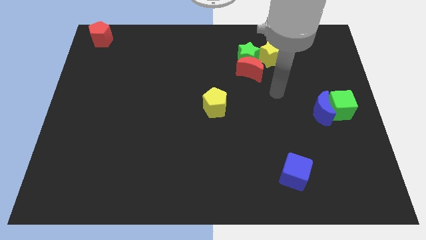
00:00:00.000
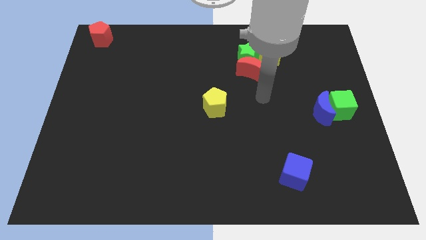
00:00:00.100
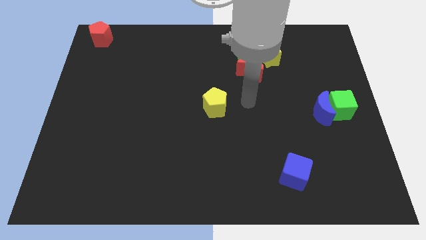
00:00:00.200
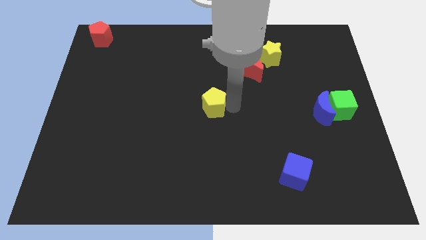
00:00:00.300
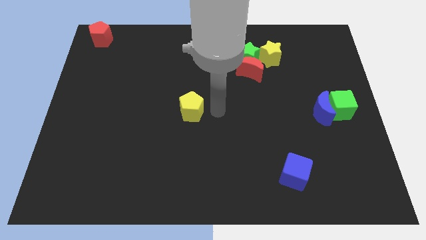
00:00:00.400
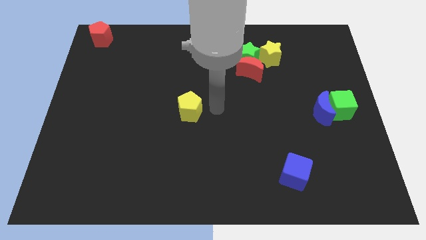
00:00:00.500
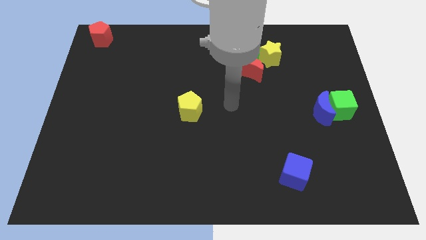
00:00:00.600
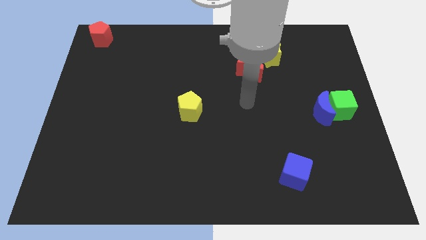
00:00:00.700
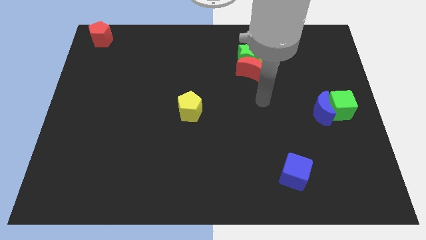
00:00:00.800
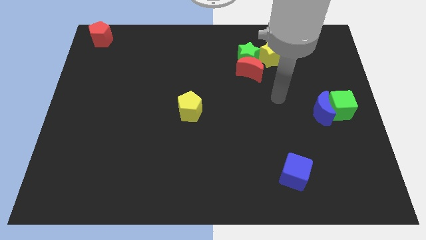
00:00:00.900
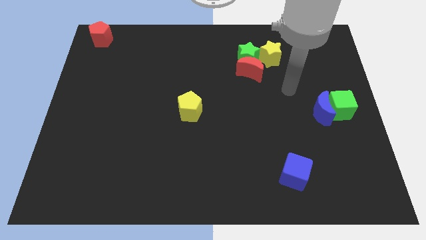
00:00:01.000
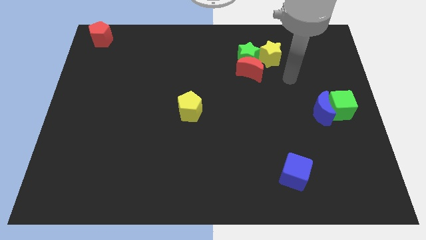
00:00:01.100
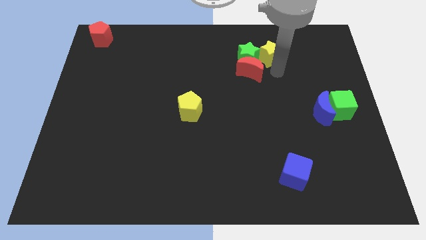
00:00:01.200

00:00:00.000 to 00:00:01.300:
slightly push the yellow pentagon towards the left

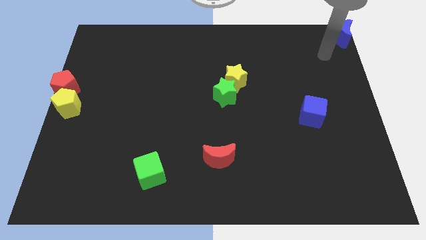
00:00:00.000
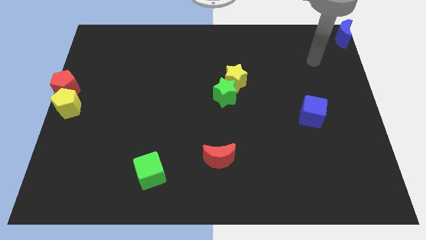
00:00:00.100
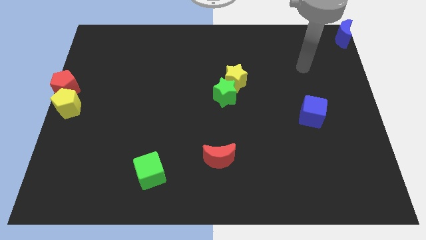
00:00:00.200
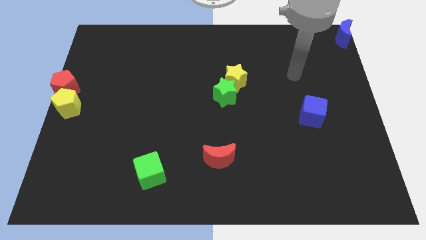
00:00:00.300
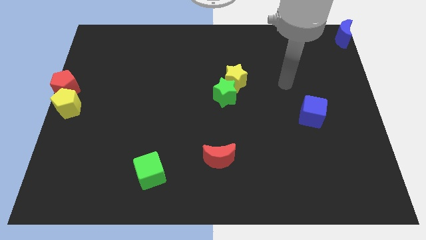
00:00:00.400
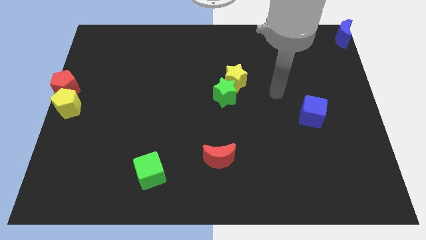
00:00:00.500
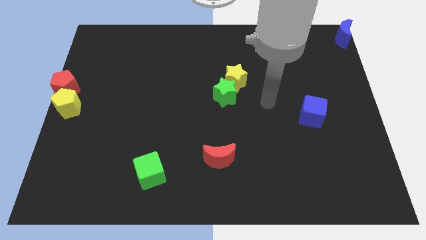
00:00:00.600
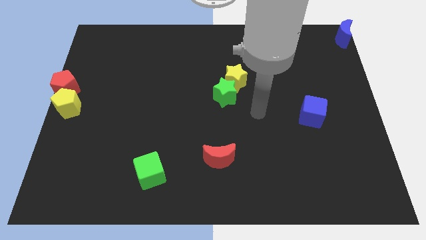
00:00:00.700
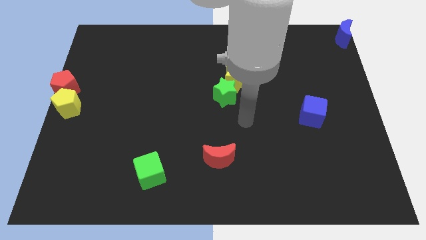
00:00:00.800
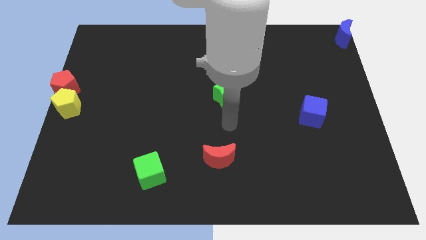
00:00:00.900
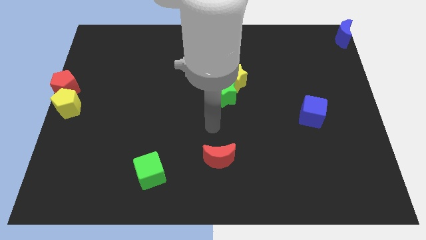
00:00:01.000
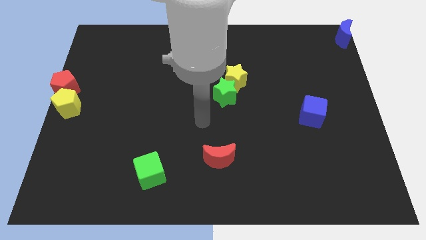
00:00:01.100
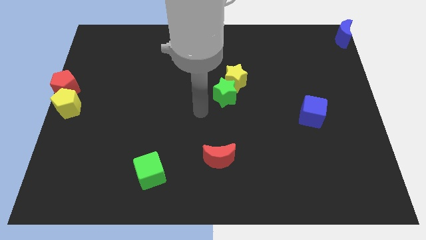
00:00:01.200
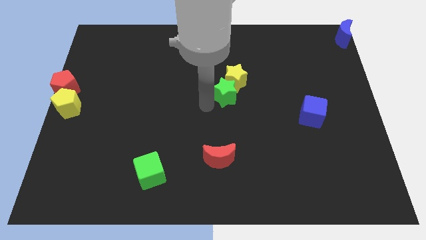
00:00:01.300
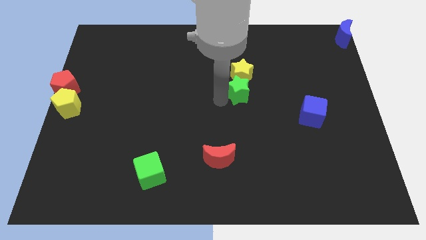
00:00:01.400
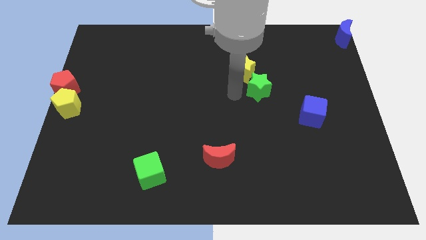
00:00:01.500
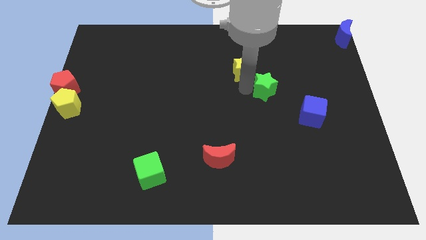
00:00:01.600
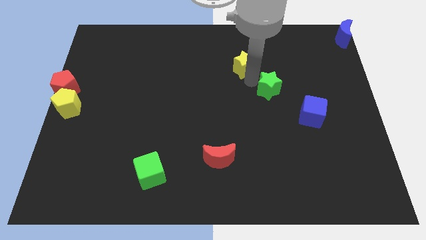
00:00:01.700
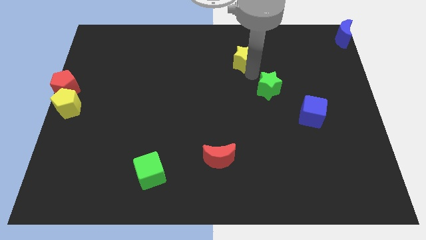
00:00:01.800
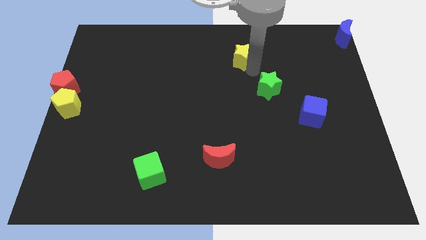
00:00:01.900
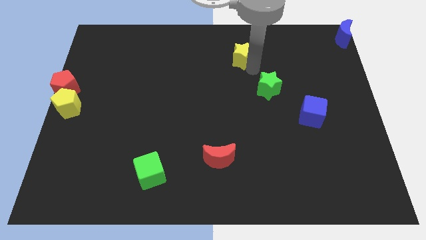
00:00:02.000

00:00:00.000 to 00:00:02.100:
separate yellow star from green star

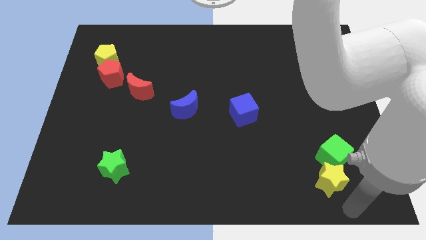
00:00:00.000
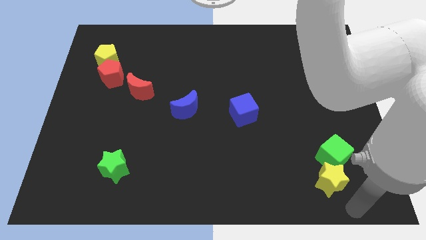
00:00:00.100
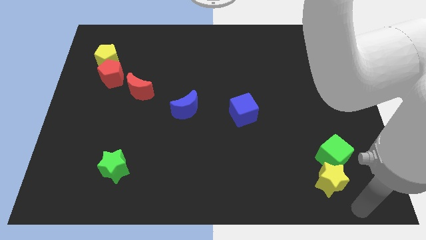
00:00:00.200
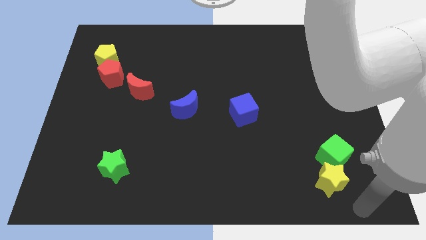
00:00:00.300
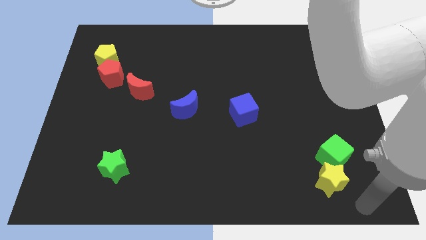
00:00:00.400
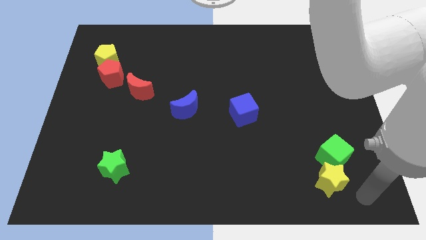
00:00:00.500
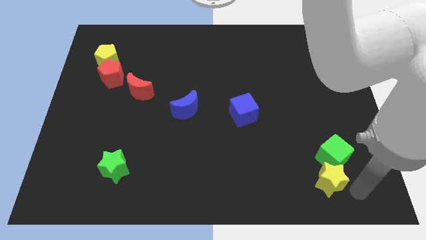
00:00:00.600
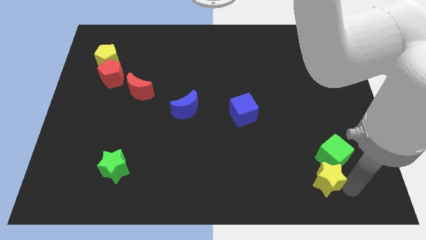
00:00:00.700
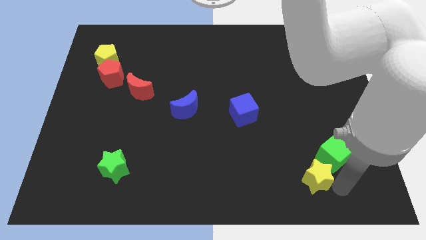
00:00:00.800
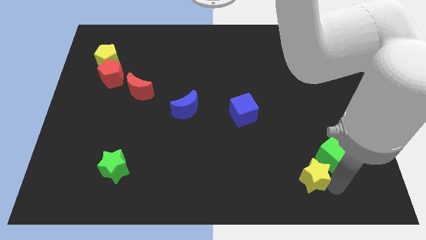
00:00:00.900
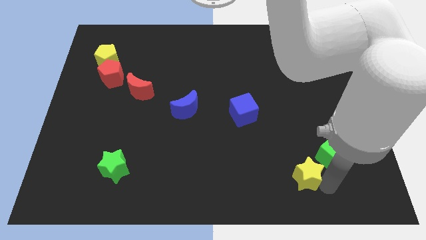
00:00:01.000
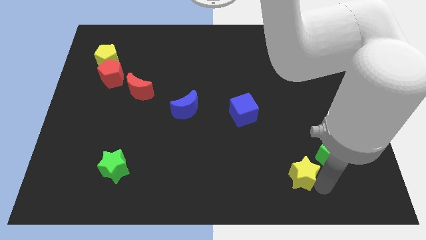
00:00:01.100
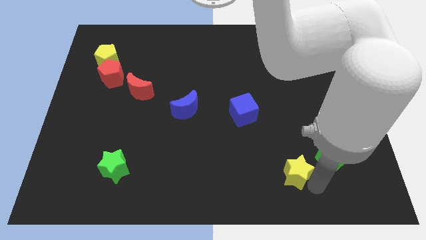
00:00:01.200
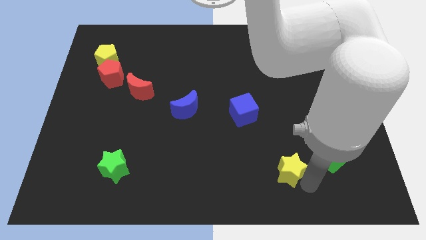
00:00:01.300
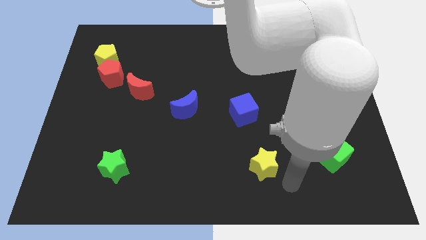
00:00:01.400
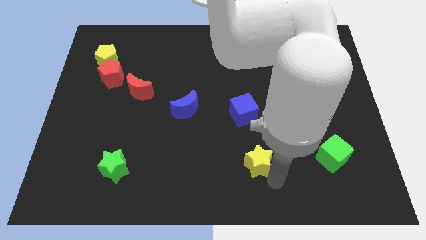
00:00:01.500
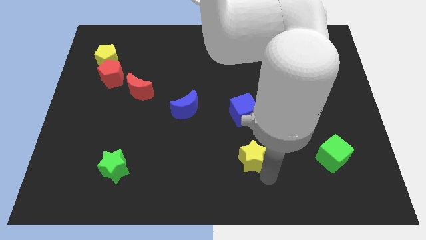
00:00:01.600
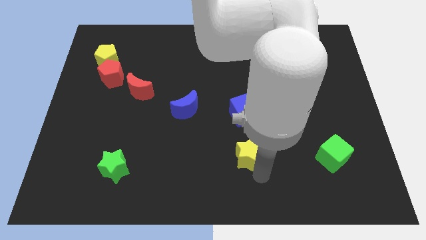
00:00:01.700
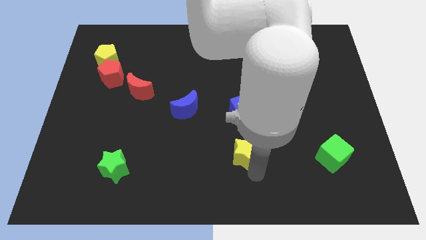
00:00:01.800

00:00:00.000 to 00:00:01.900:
push the yellow star below the blue cube

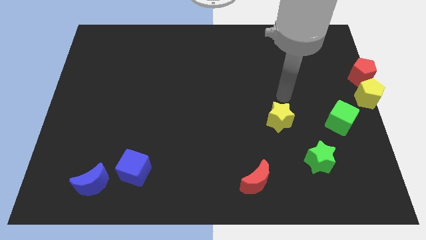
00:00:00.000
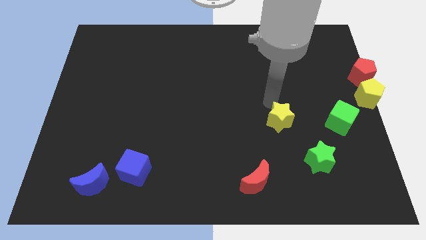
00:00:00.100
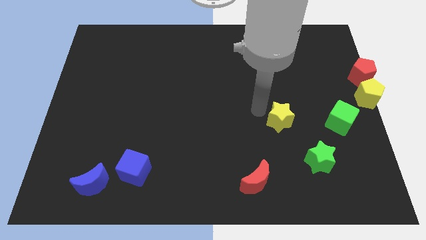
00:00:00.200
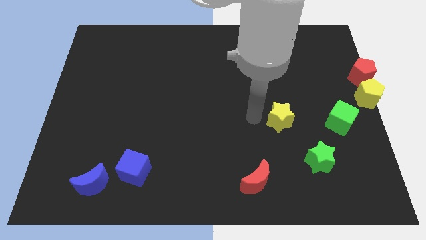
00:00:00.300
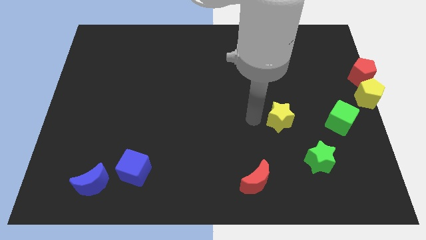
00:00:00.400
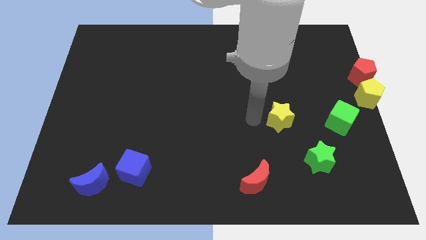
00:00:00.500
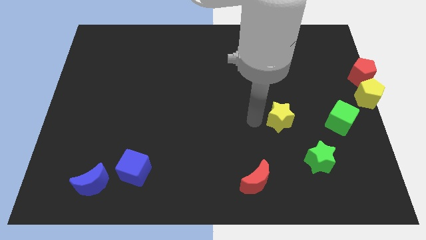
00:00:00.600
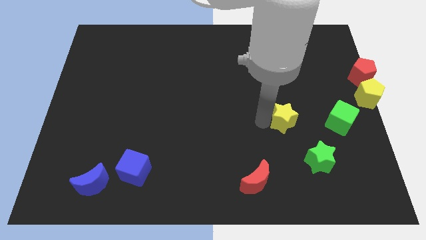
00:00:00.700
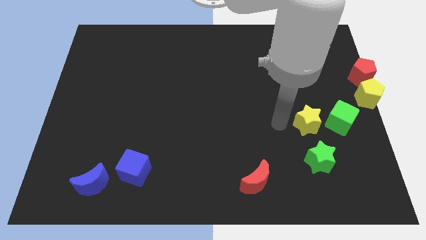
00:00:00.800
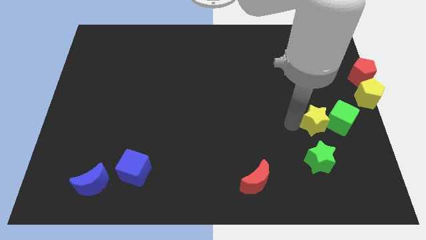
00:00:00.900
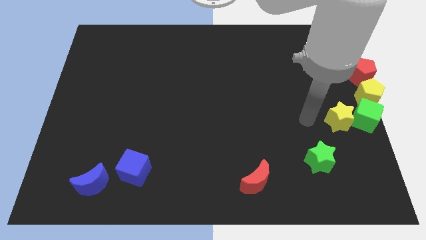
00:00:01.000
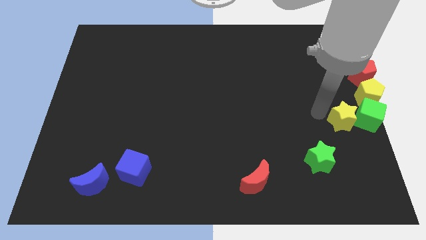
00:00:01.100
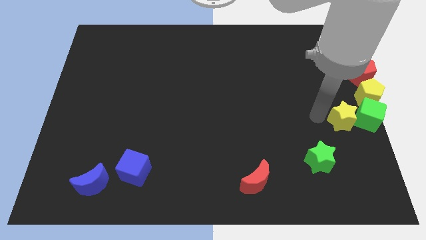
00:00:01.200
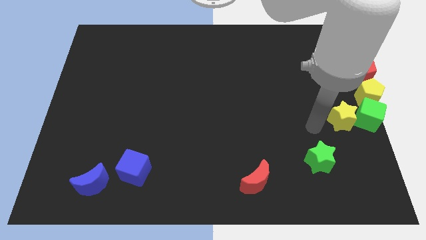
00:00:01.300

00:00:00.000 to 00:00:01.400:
push the yellow star to the left side of the green cube

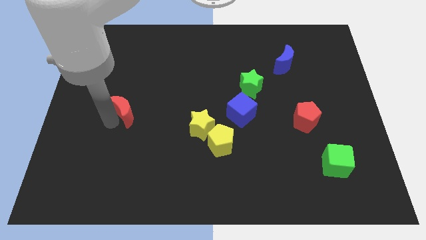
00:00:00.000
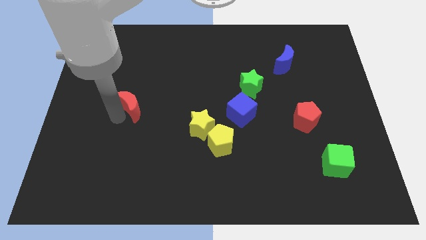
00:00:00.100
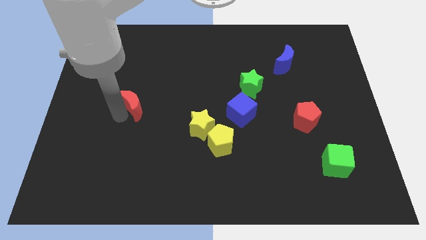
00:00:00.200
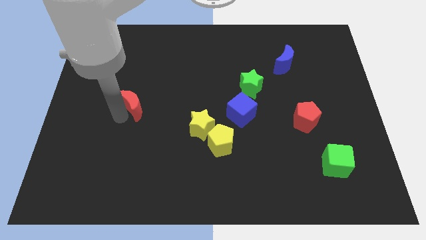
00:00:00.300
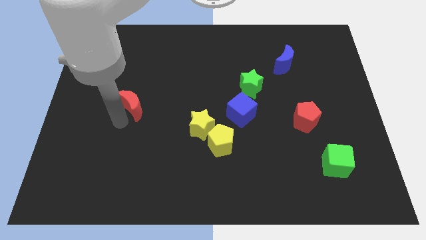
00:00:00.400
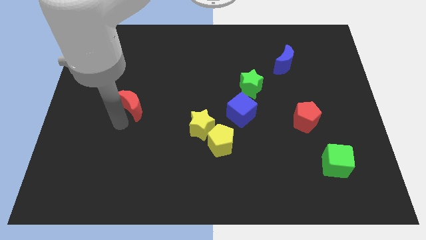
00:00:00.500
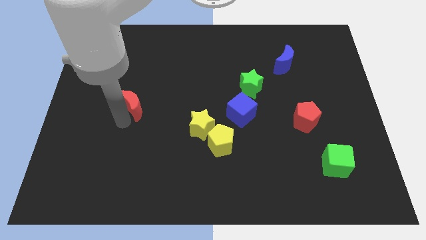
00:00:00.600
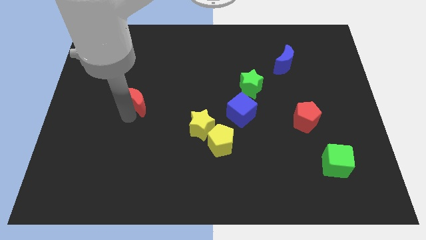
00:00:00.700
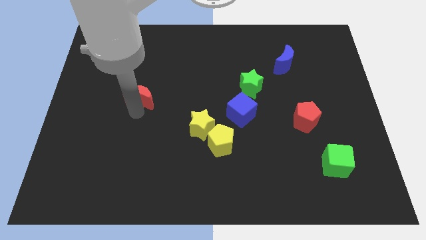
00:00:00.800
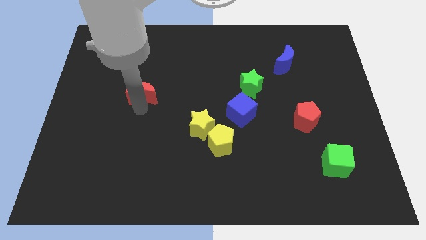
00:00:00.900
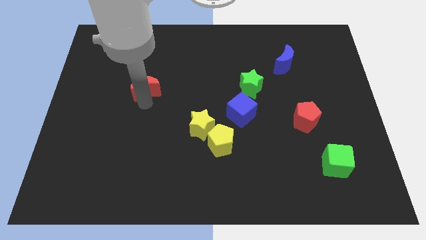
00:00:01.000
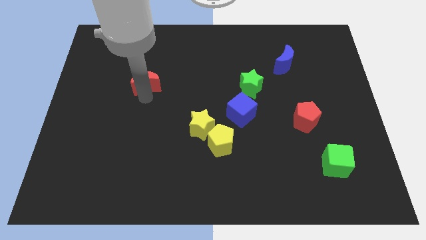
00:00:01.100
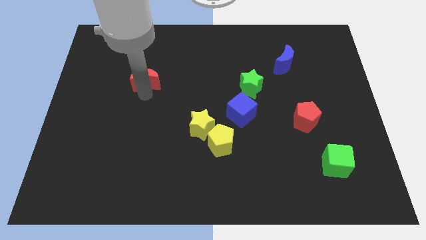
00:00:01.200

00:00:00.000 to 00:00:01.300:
push the red crescent to the left of the green star

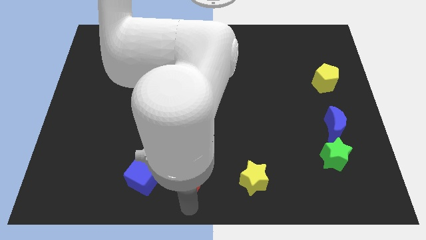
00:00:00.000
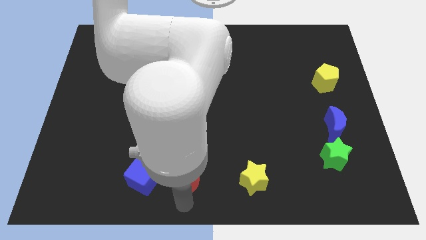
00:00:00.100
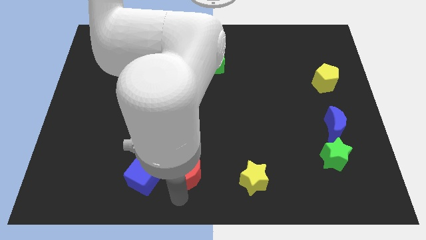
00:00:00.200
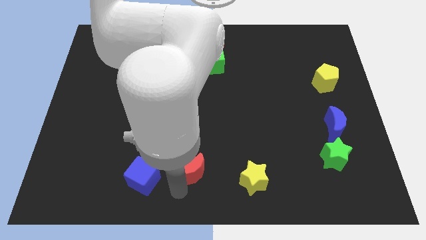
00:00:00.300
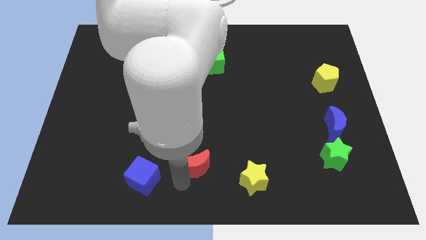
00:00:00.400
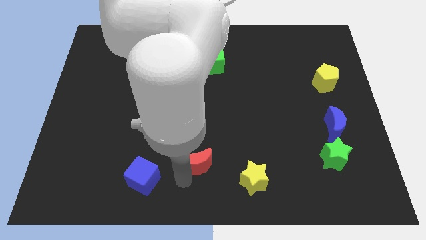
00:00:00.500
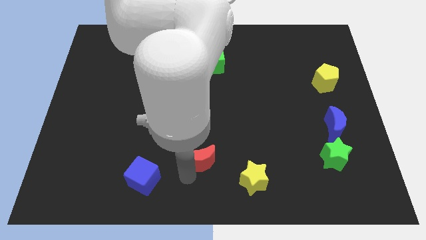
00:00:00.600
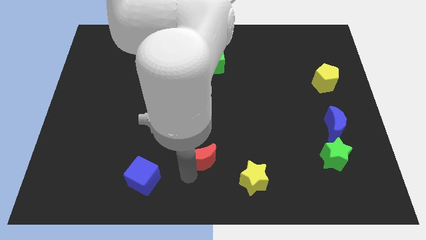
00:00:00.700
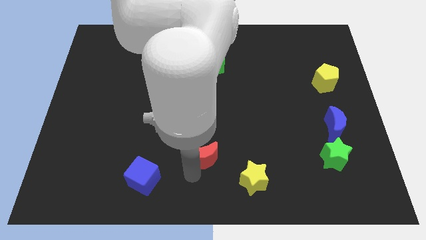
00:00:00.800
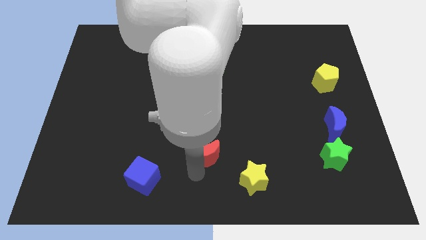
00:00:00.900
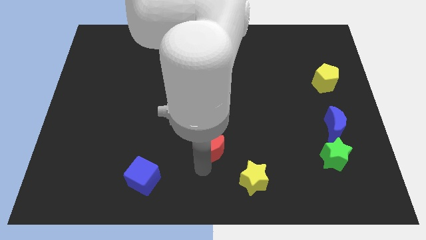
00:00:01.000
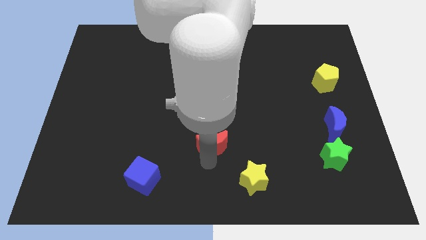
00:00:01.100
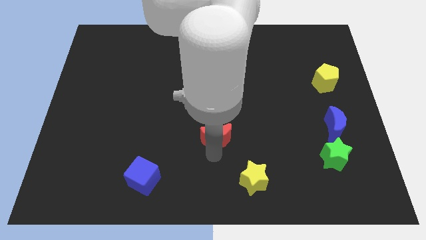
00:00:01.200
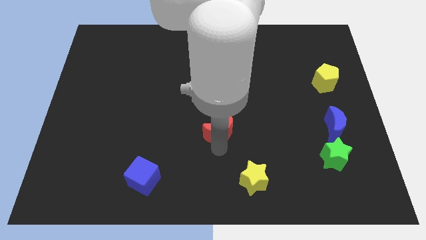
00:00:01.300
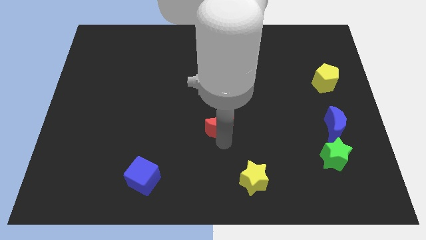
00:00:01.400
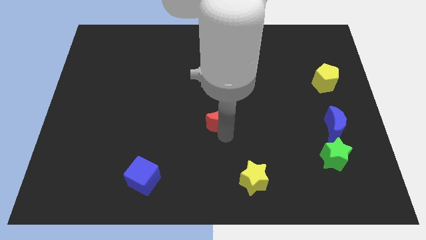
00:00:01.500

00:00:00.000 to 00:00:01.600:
push the red moon towards the center of the board
